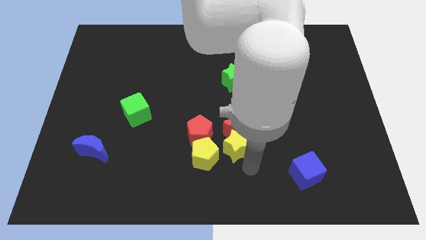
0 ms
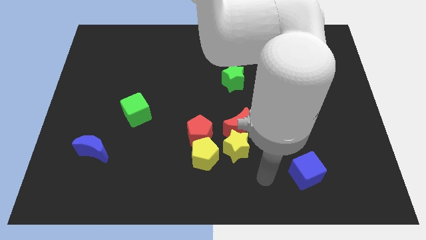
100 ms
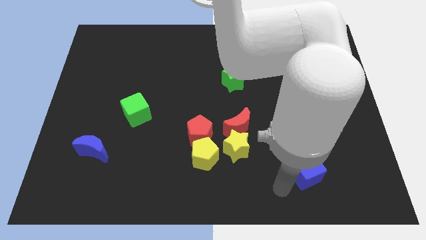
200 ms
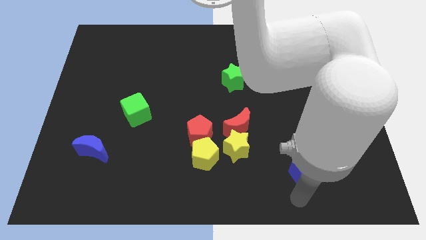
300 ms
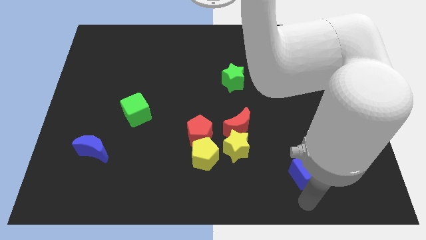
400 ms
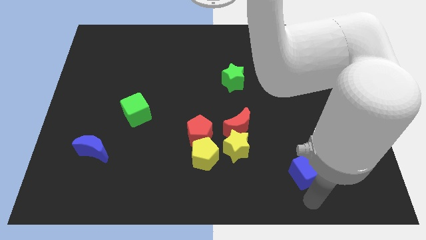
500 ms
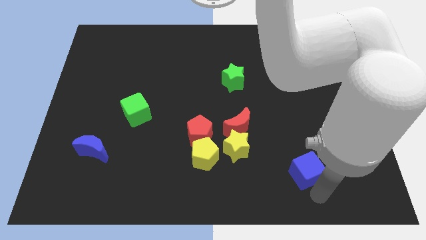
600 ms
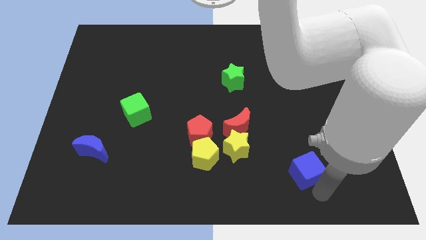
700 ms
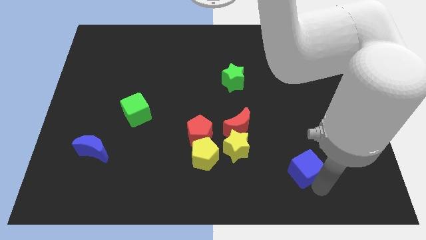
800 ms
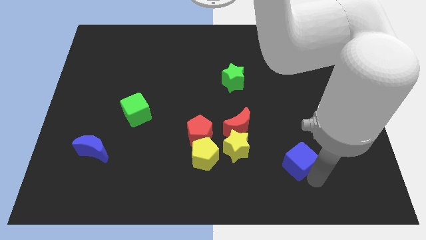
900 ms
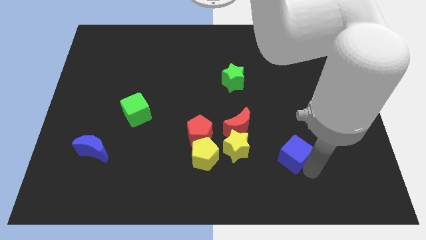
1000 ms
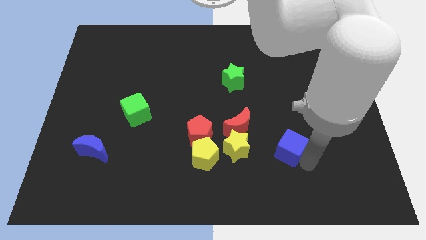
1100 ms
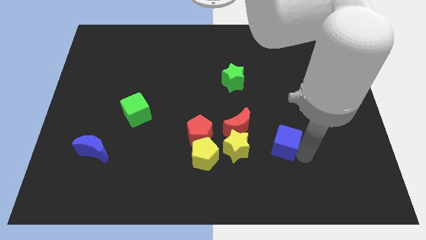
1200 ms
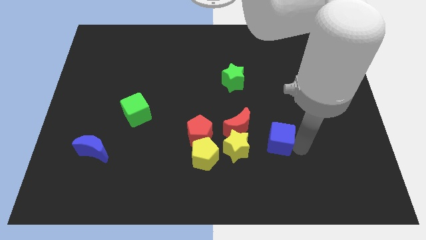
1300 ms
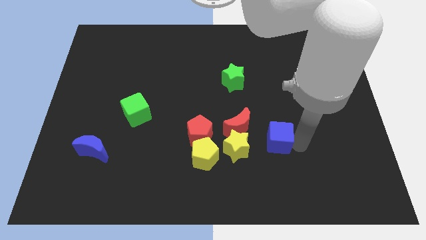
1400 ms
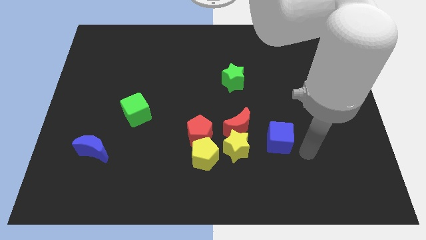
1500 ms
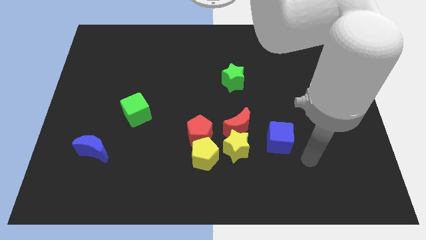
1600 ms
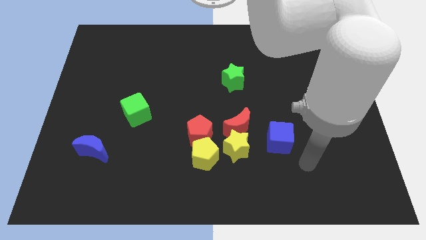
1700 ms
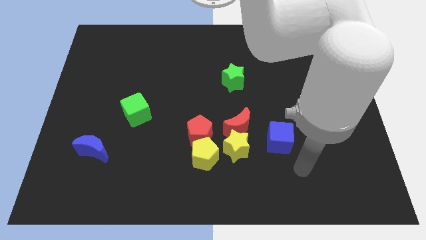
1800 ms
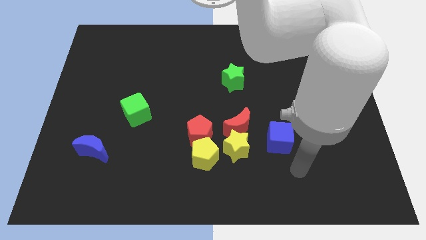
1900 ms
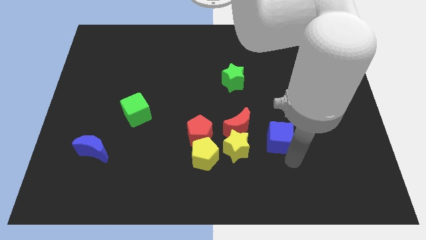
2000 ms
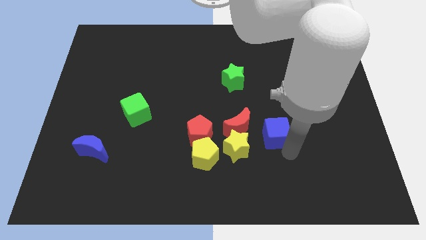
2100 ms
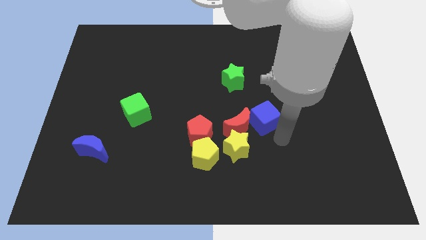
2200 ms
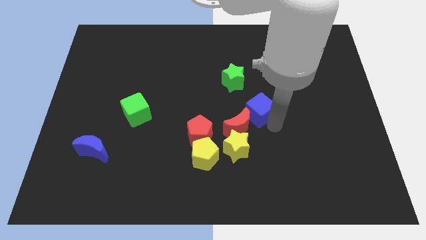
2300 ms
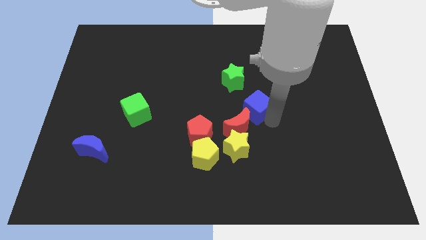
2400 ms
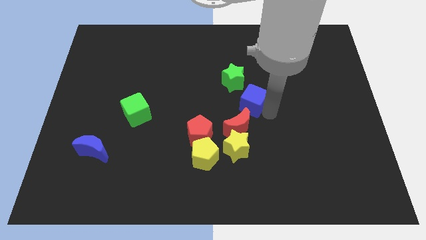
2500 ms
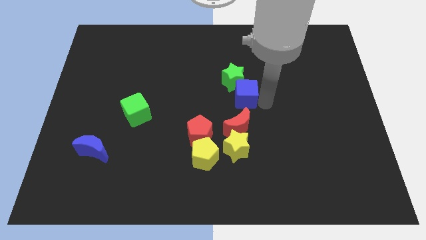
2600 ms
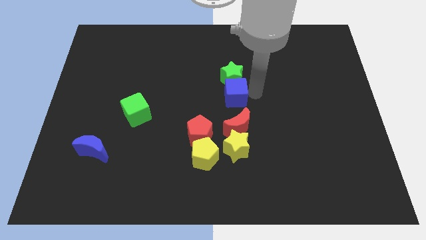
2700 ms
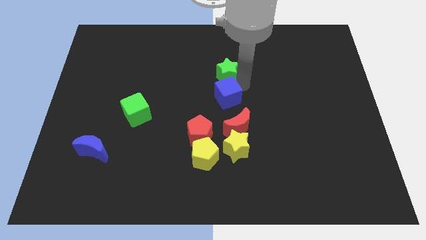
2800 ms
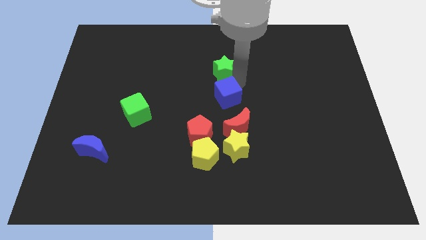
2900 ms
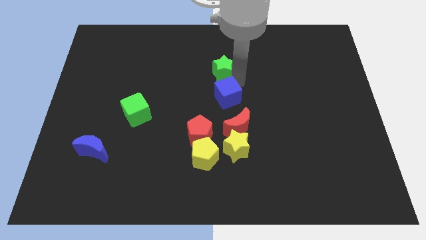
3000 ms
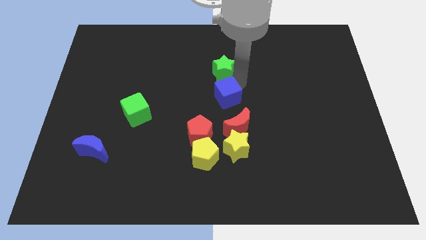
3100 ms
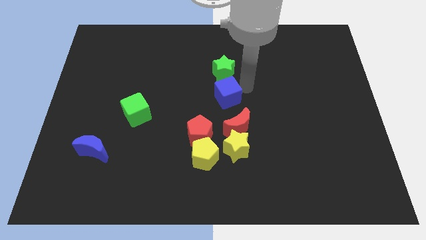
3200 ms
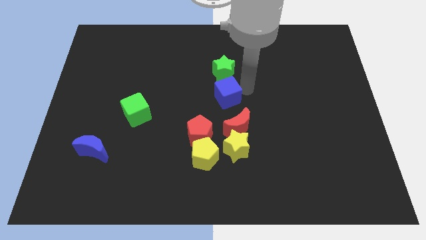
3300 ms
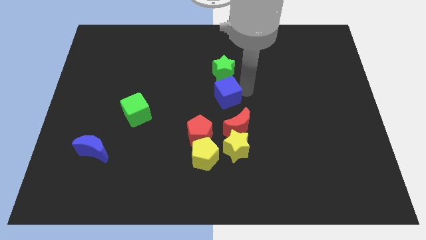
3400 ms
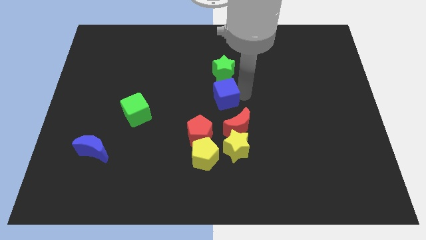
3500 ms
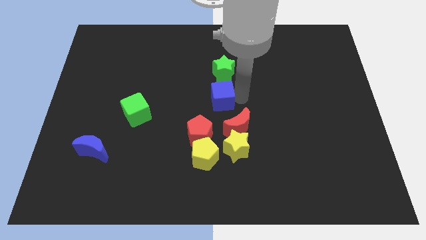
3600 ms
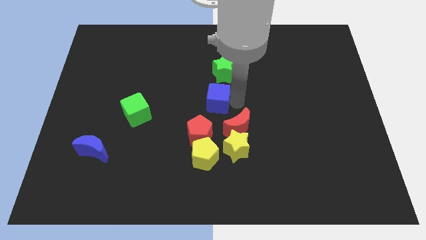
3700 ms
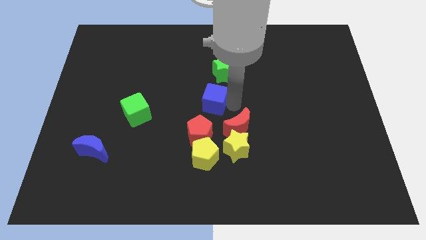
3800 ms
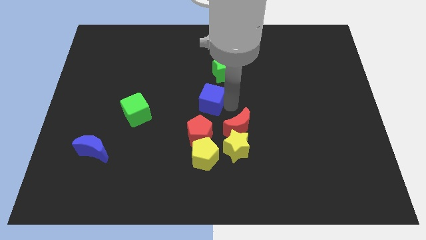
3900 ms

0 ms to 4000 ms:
place the blue cube at the center of the board

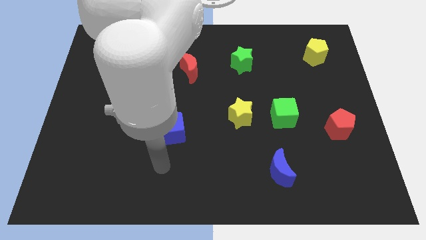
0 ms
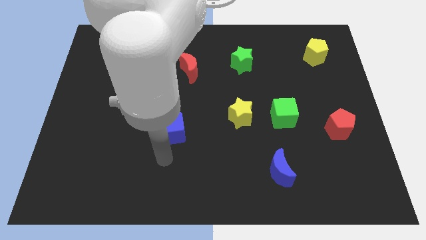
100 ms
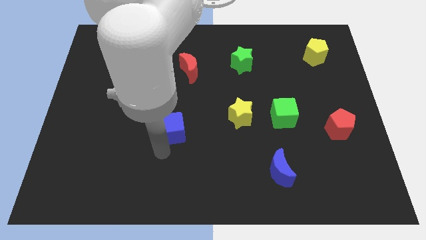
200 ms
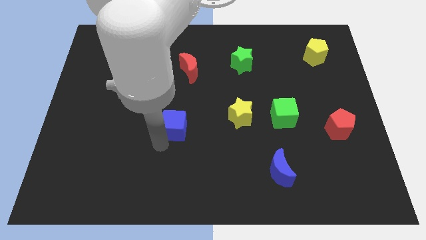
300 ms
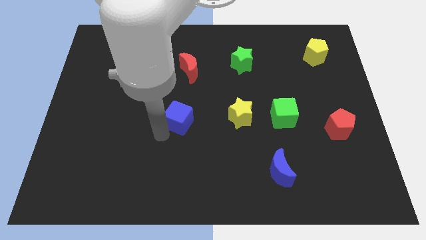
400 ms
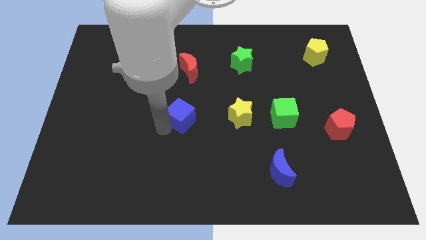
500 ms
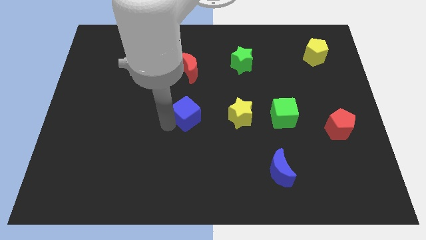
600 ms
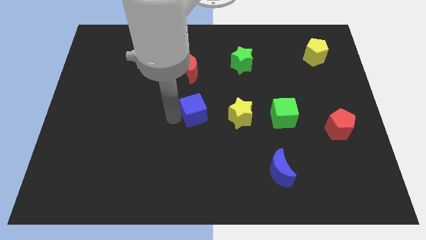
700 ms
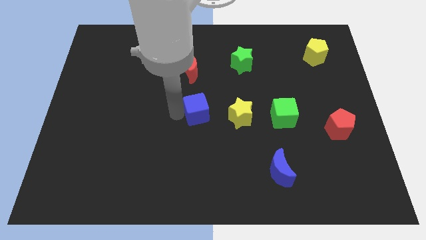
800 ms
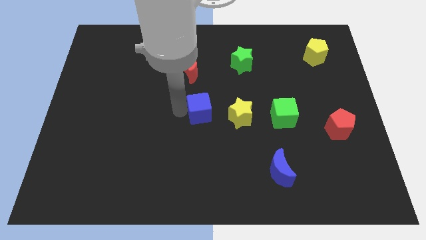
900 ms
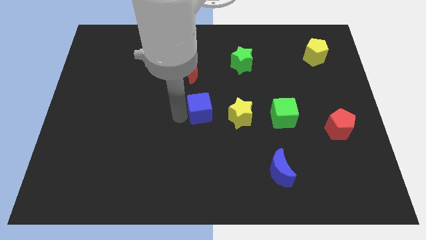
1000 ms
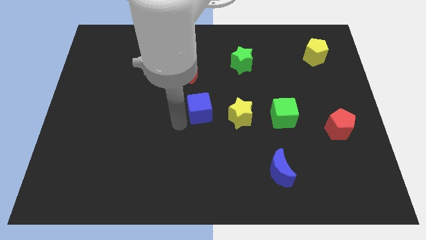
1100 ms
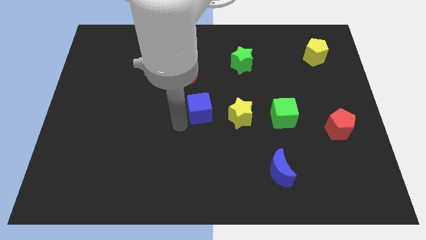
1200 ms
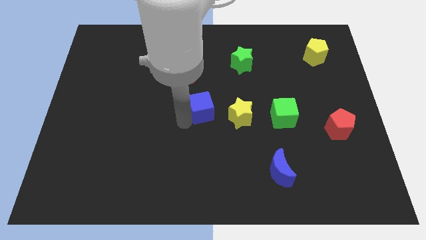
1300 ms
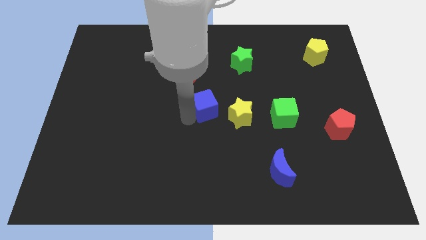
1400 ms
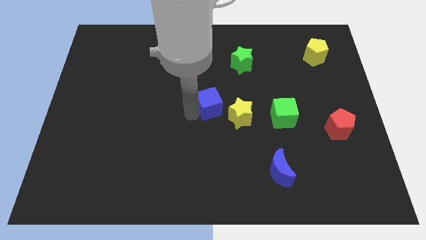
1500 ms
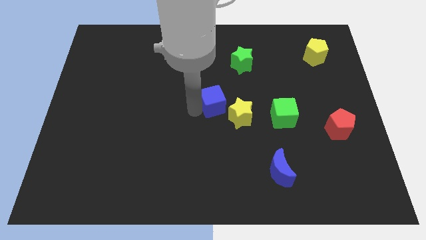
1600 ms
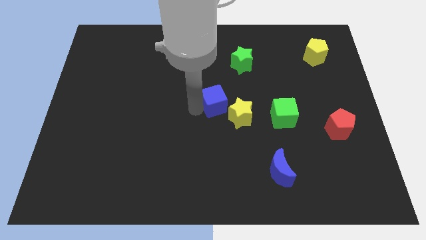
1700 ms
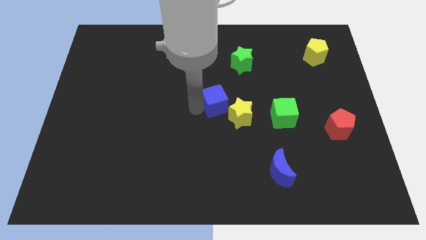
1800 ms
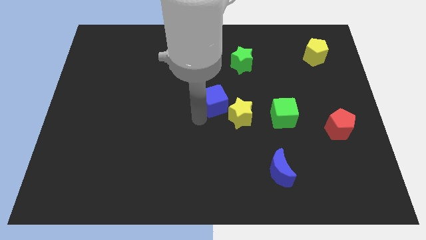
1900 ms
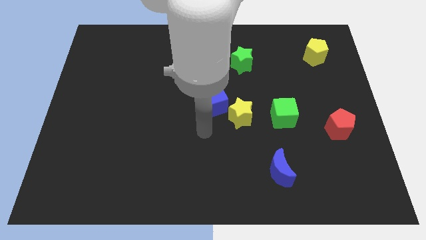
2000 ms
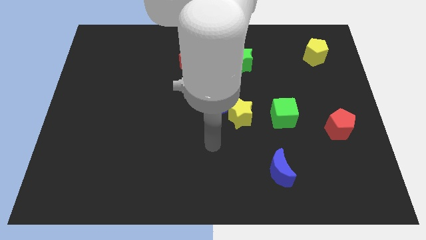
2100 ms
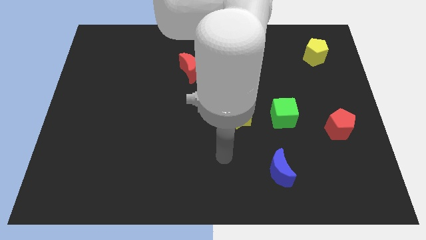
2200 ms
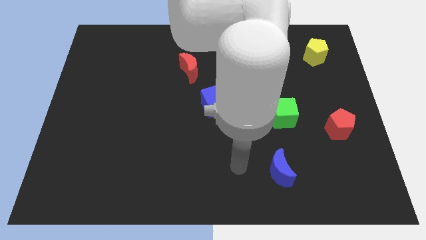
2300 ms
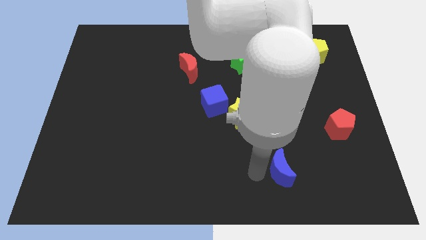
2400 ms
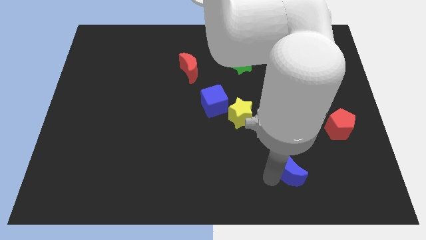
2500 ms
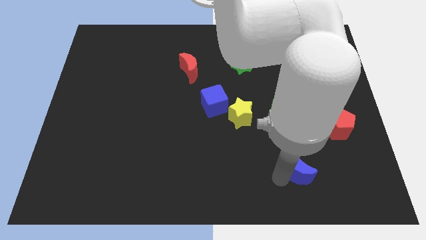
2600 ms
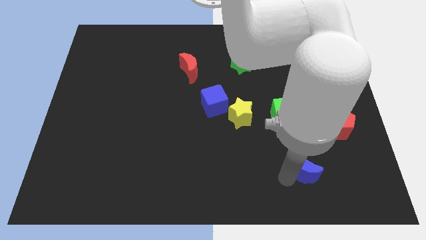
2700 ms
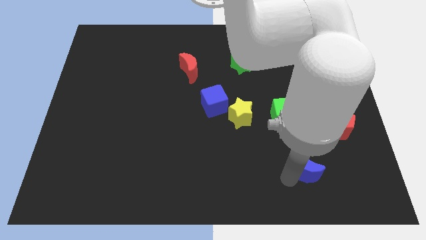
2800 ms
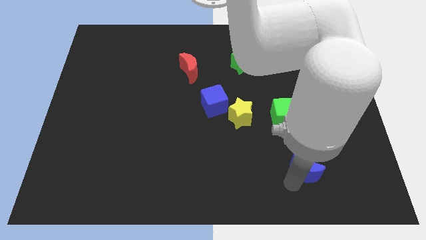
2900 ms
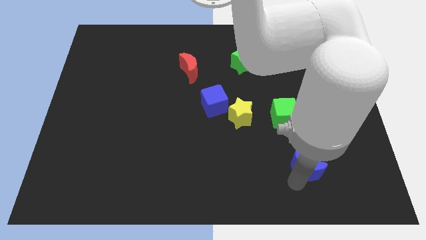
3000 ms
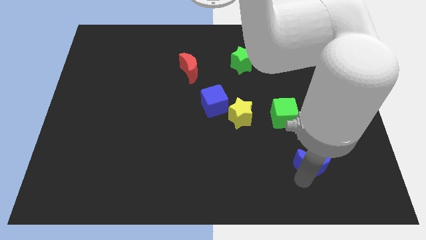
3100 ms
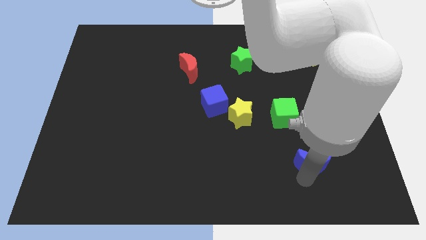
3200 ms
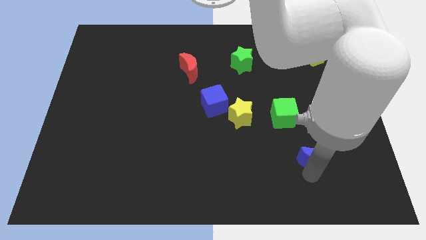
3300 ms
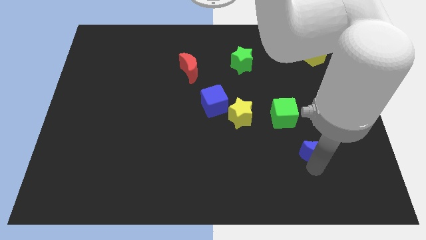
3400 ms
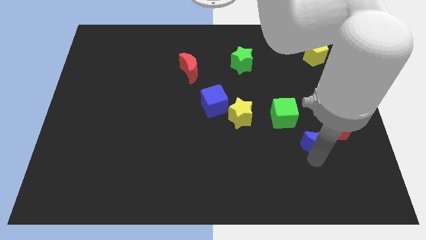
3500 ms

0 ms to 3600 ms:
place the blue moon diagonal to the green cube

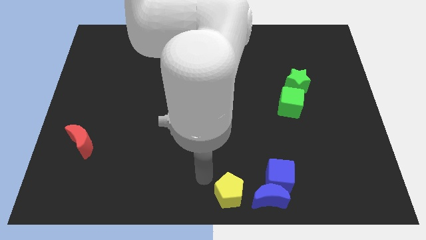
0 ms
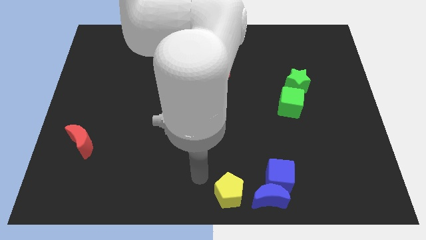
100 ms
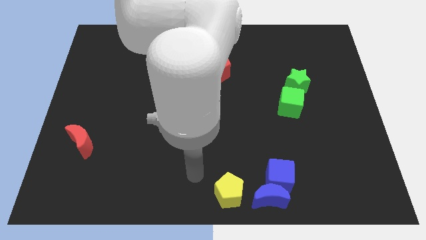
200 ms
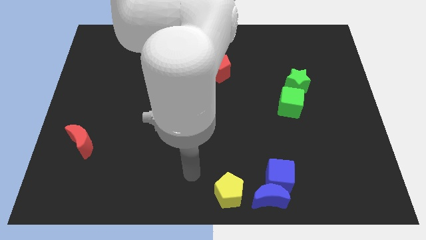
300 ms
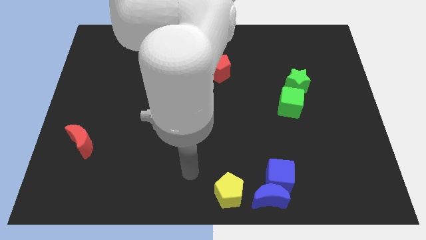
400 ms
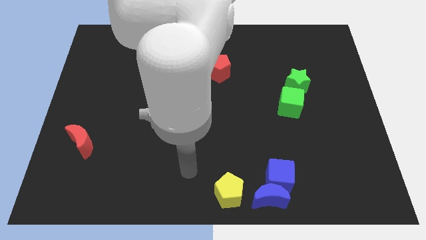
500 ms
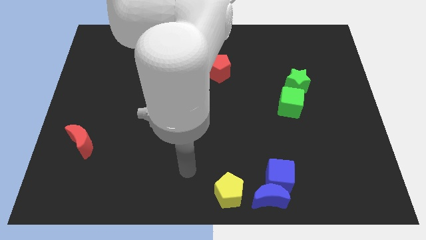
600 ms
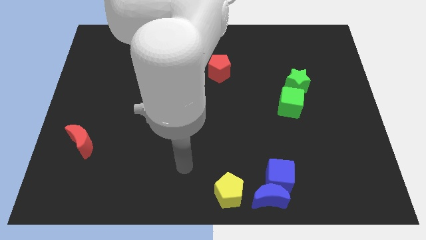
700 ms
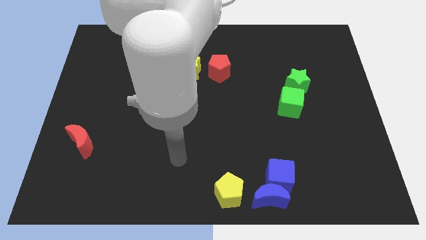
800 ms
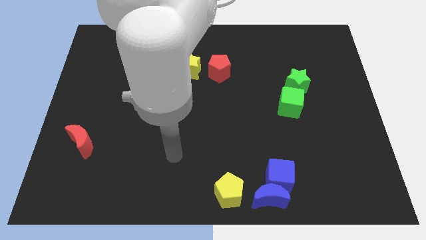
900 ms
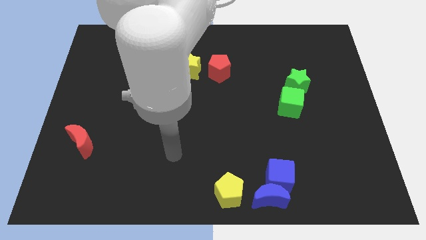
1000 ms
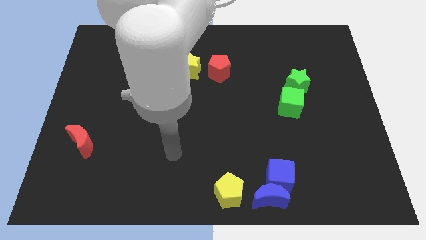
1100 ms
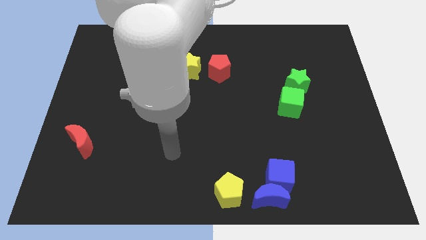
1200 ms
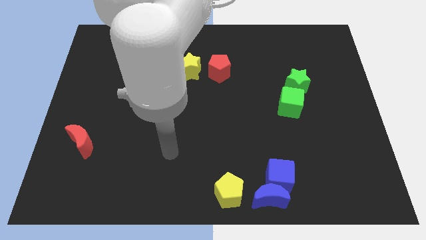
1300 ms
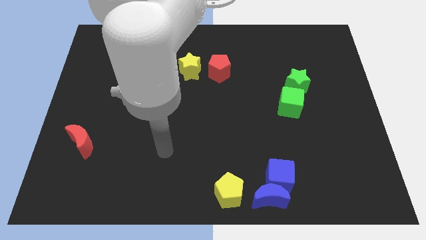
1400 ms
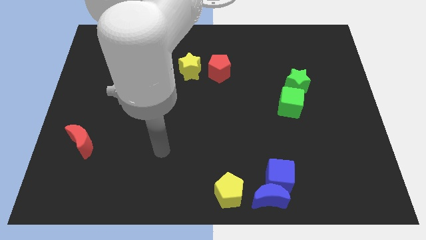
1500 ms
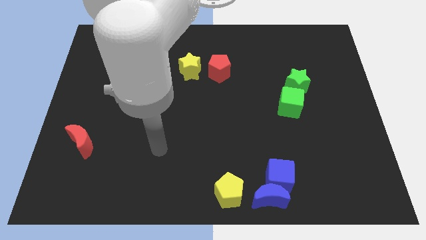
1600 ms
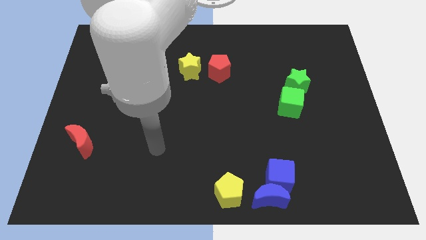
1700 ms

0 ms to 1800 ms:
move your ahnd away from the yellow pentagon
